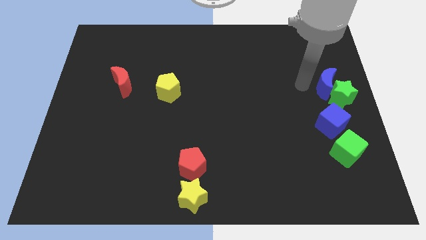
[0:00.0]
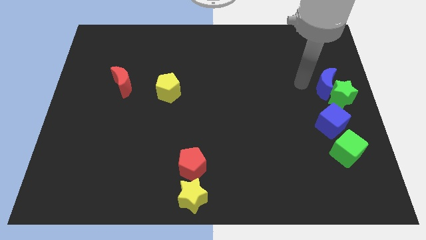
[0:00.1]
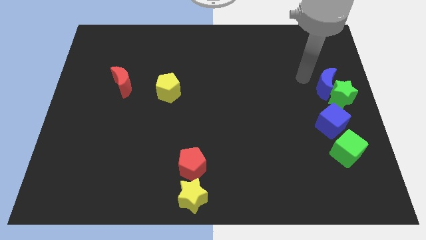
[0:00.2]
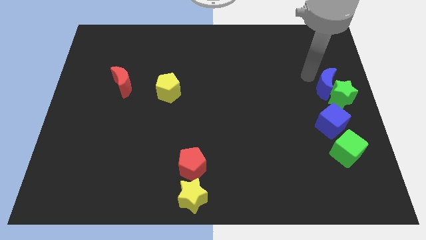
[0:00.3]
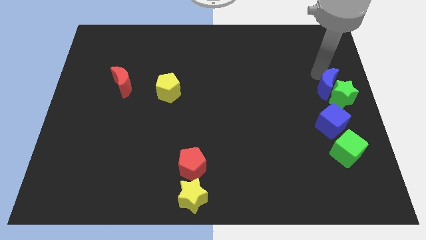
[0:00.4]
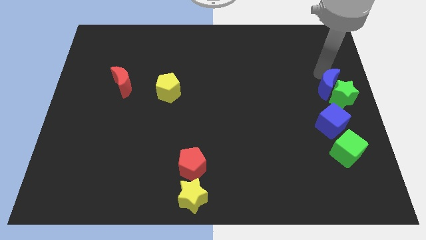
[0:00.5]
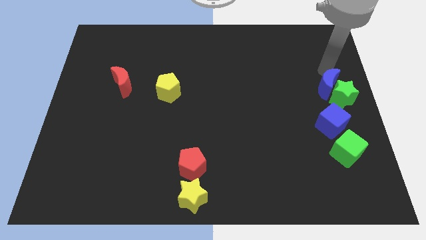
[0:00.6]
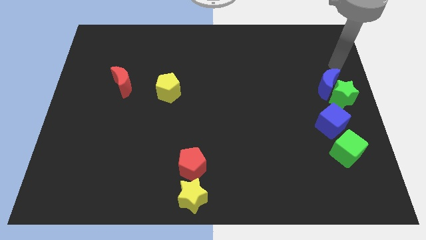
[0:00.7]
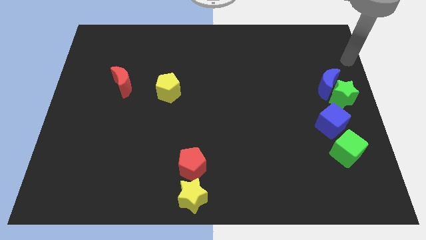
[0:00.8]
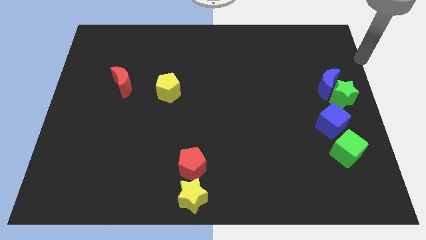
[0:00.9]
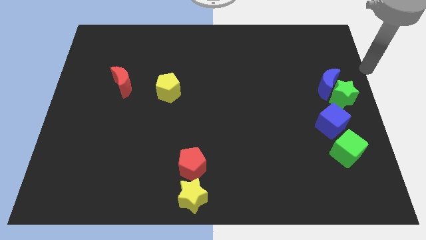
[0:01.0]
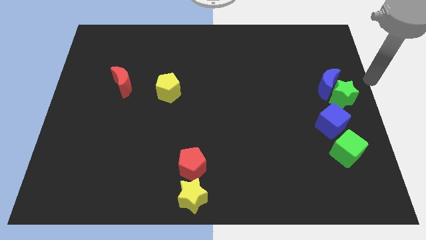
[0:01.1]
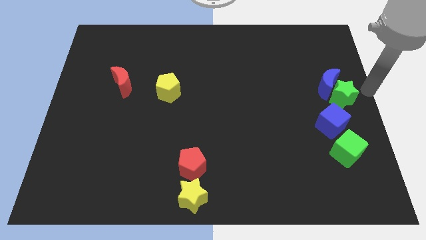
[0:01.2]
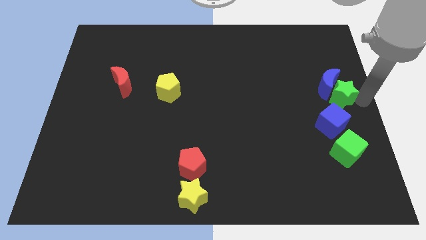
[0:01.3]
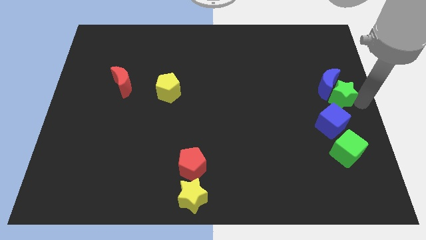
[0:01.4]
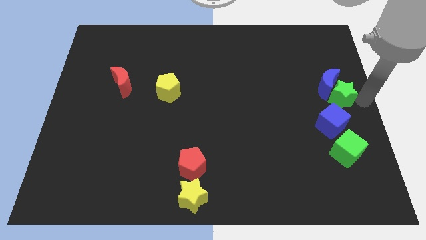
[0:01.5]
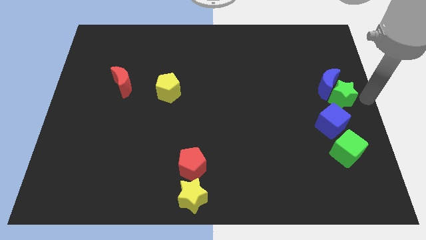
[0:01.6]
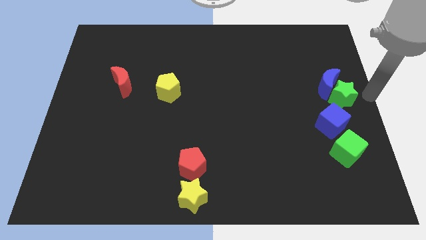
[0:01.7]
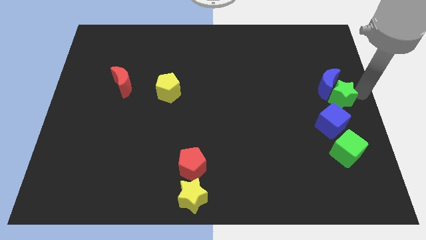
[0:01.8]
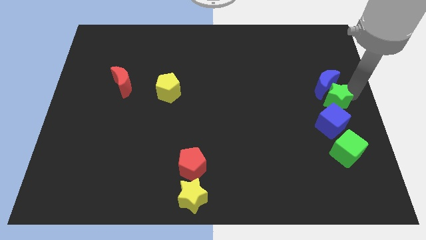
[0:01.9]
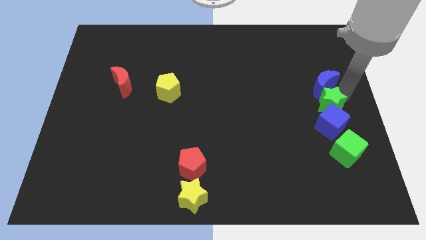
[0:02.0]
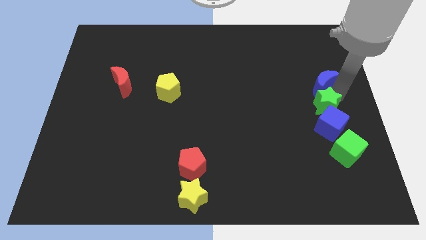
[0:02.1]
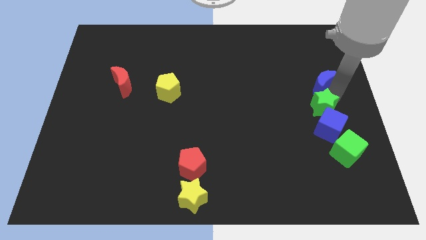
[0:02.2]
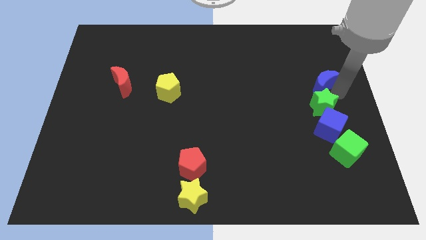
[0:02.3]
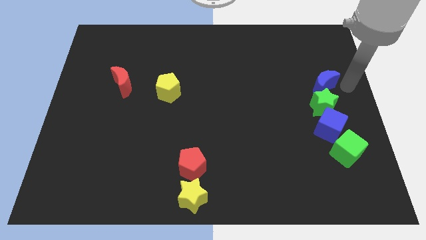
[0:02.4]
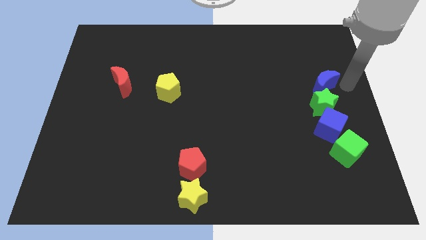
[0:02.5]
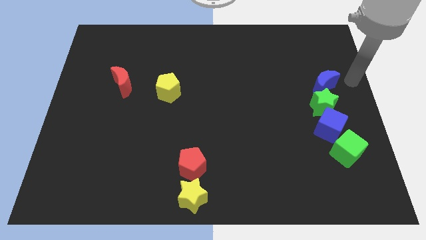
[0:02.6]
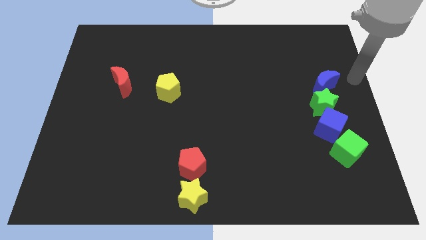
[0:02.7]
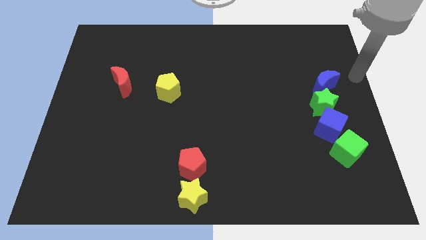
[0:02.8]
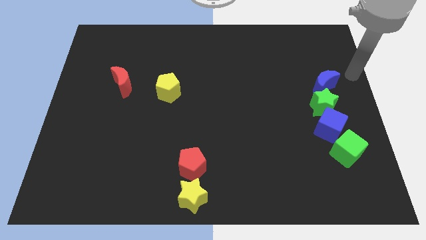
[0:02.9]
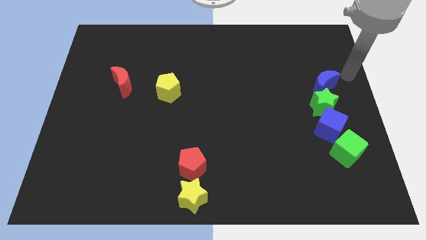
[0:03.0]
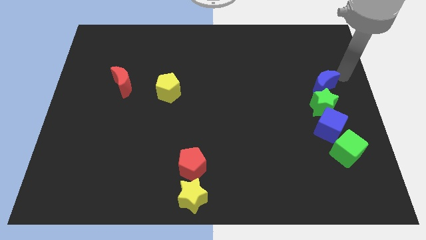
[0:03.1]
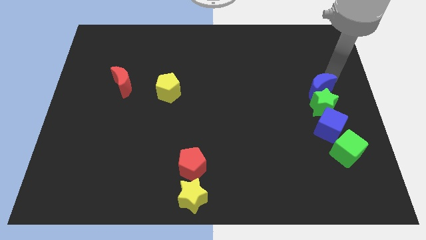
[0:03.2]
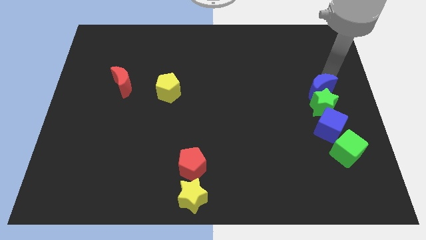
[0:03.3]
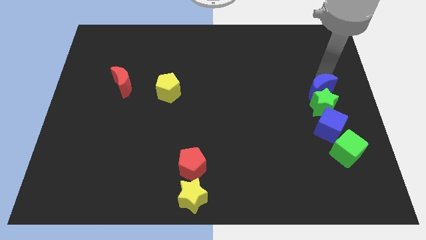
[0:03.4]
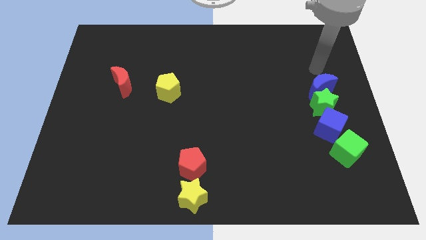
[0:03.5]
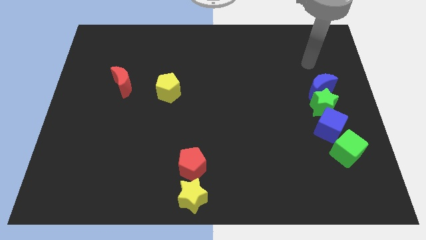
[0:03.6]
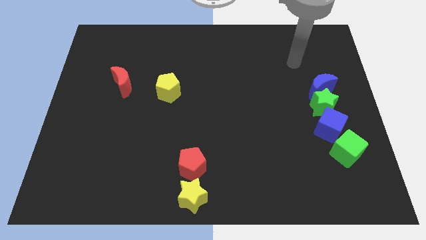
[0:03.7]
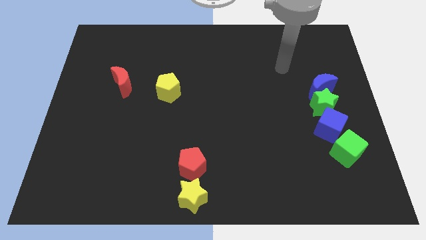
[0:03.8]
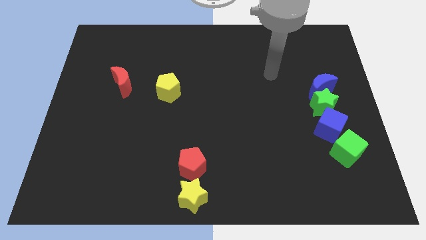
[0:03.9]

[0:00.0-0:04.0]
slightly push the green star into blue cube

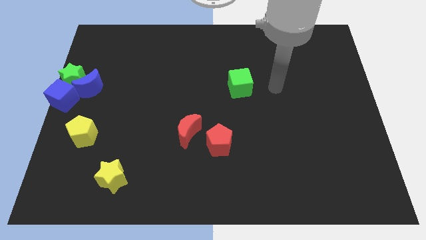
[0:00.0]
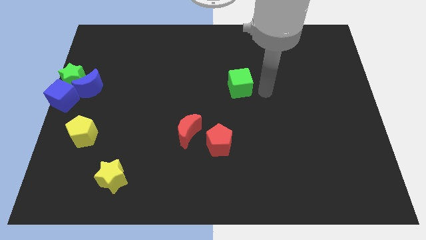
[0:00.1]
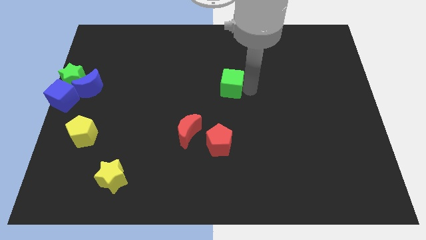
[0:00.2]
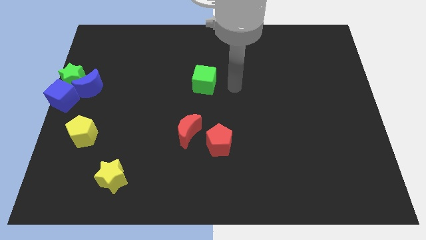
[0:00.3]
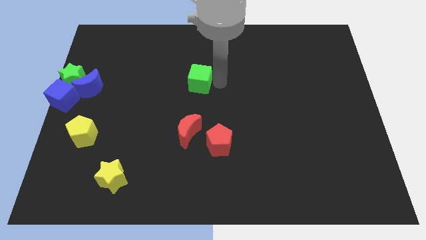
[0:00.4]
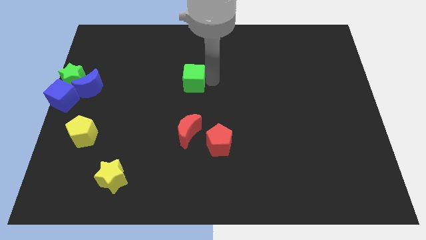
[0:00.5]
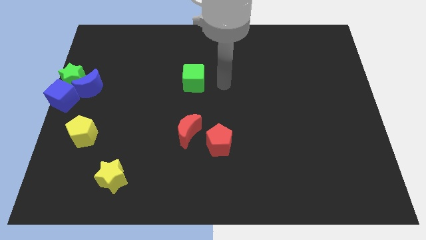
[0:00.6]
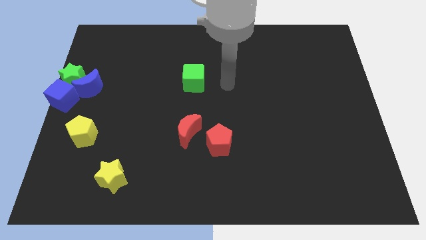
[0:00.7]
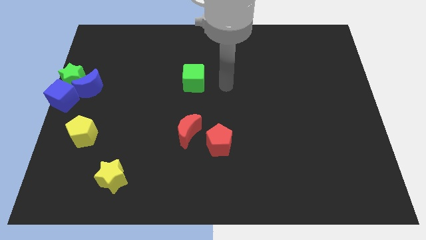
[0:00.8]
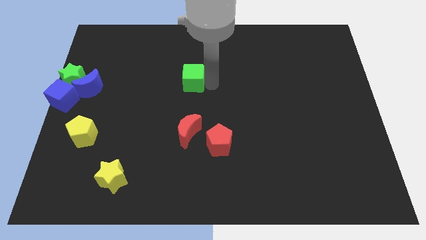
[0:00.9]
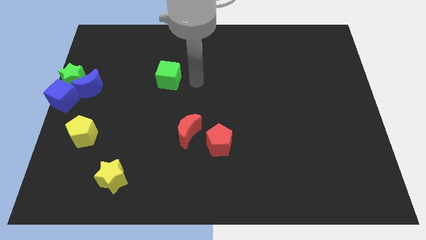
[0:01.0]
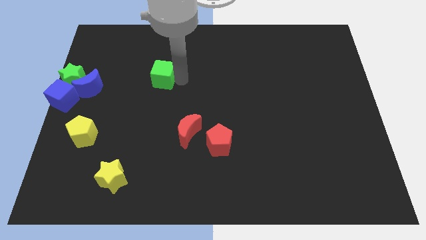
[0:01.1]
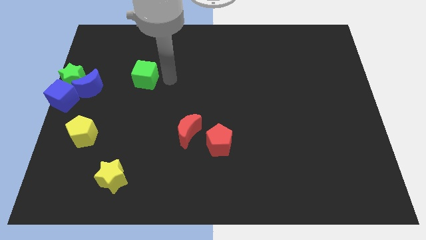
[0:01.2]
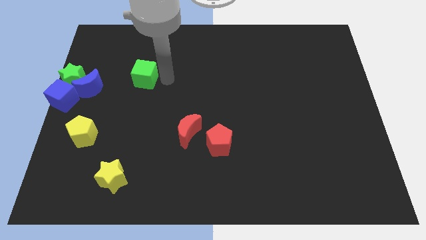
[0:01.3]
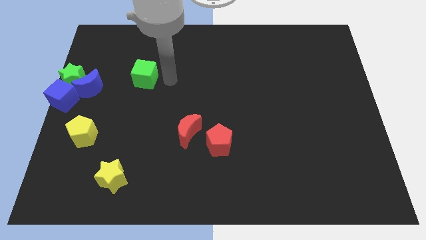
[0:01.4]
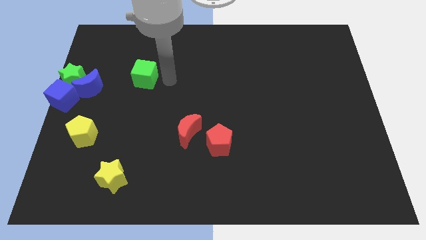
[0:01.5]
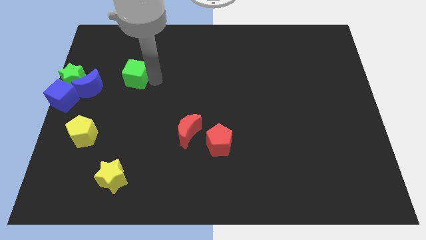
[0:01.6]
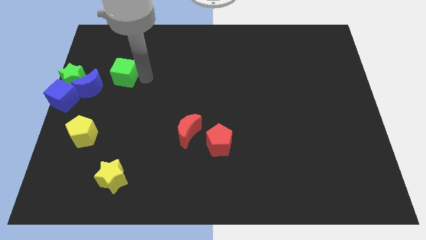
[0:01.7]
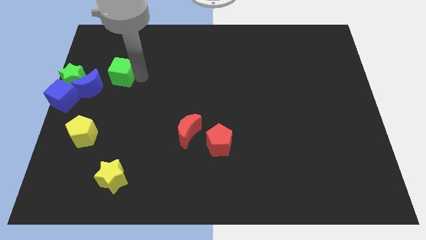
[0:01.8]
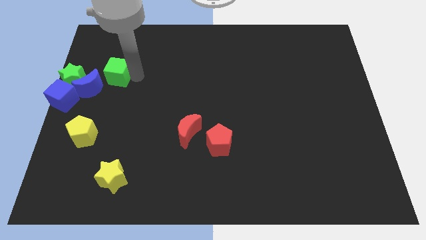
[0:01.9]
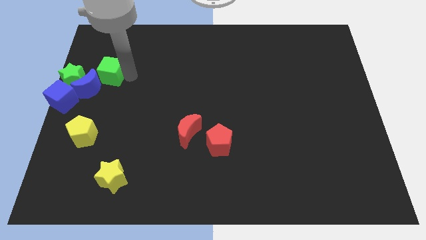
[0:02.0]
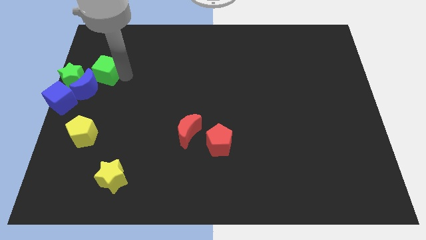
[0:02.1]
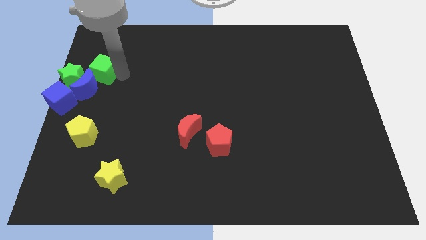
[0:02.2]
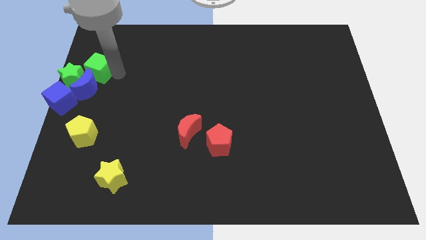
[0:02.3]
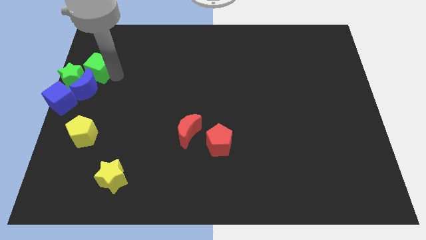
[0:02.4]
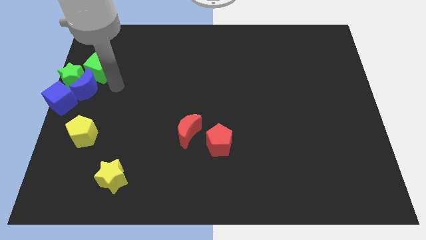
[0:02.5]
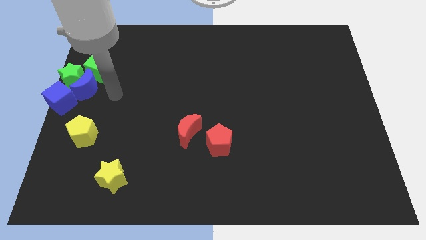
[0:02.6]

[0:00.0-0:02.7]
move the green cube close to the green star

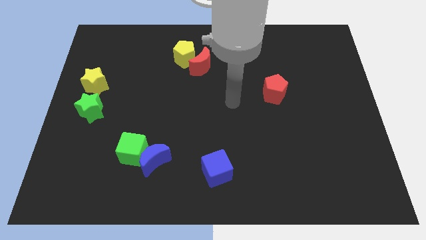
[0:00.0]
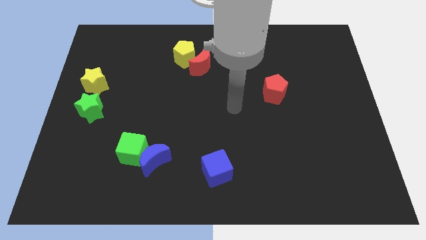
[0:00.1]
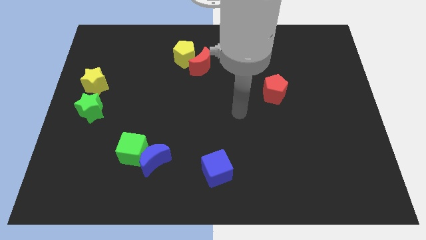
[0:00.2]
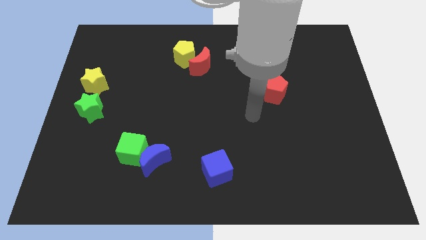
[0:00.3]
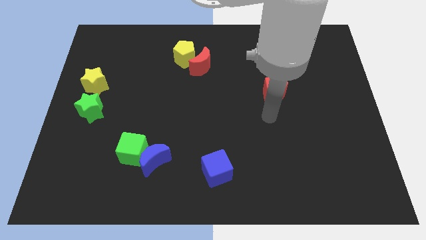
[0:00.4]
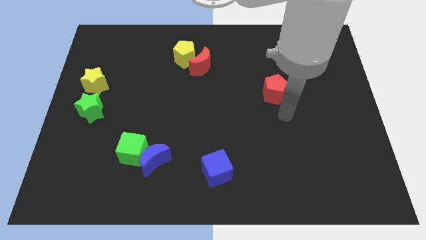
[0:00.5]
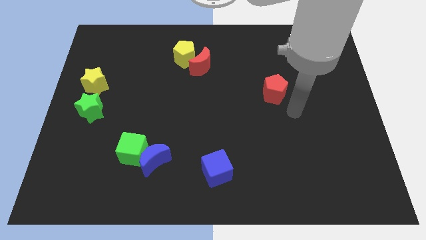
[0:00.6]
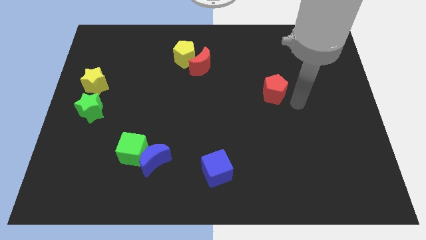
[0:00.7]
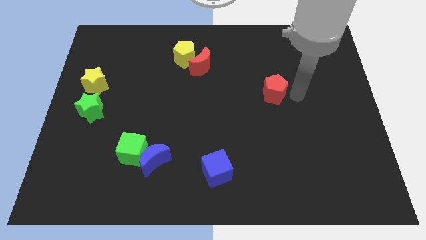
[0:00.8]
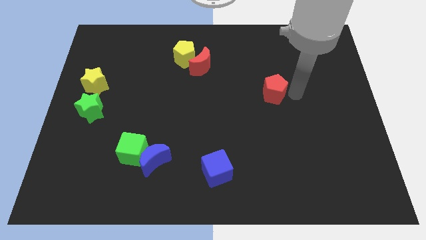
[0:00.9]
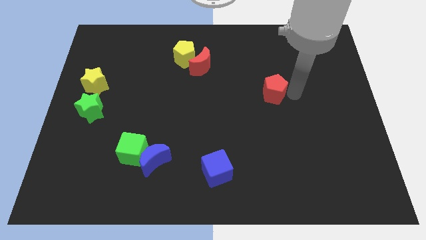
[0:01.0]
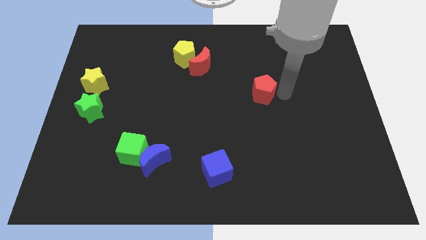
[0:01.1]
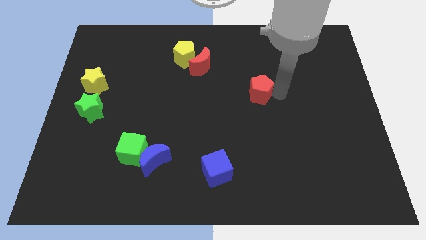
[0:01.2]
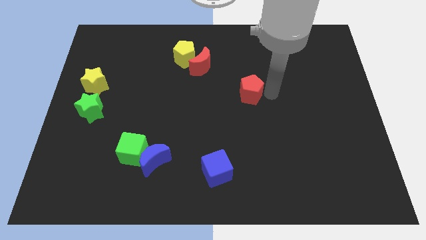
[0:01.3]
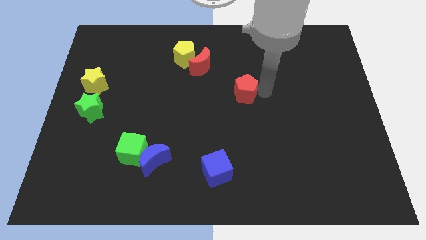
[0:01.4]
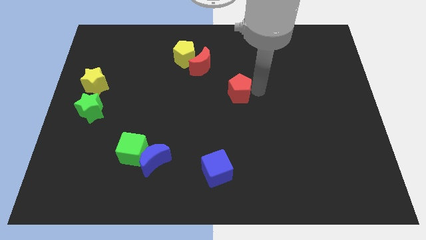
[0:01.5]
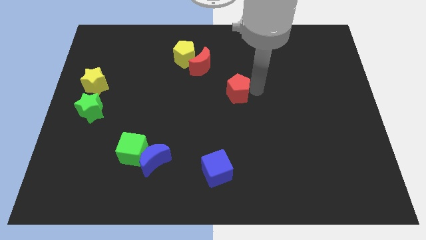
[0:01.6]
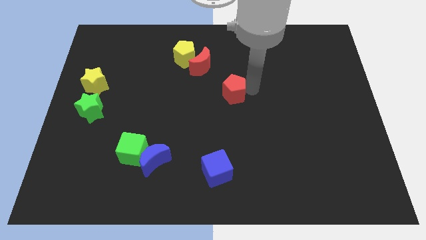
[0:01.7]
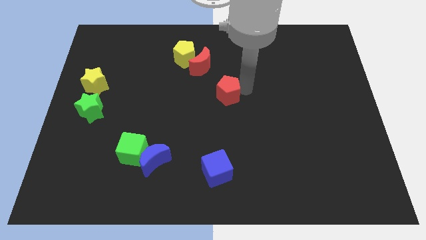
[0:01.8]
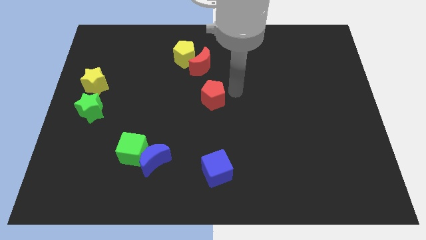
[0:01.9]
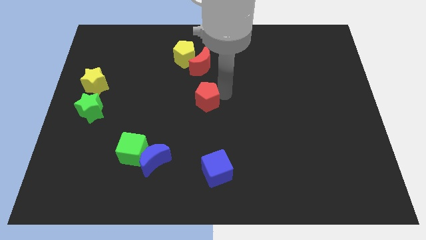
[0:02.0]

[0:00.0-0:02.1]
place the red pentagon at the center of the board

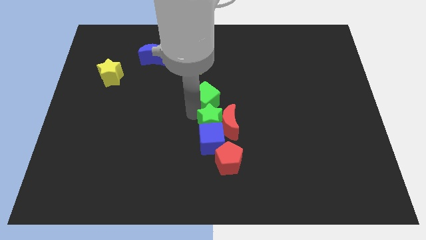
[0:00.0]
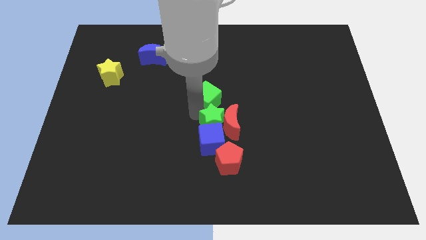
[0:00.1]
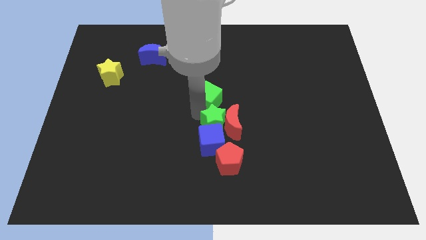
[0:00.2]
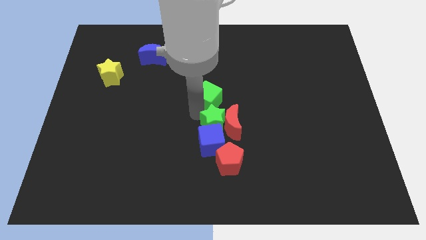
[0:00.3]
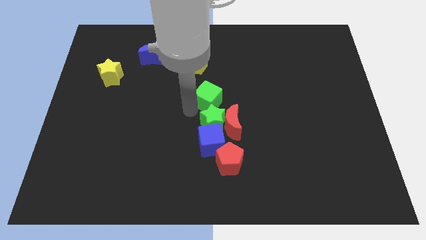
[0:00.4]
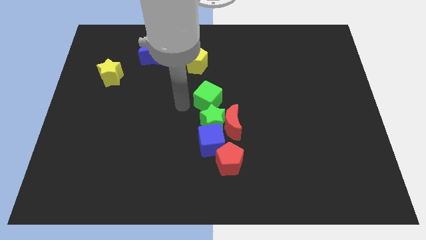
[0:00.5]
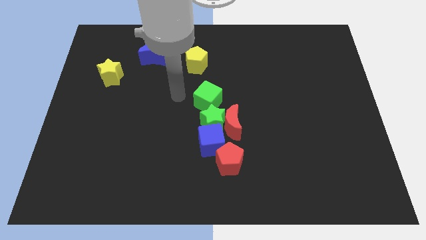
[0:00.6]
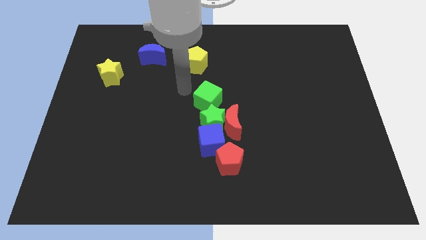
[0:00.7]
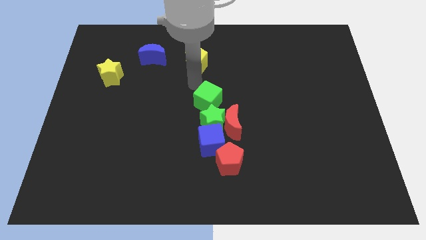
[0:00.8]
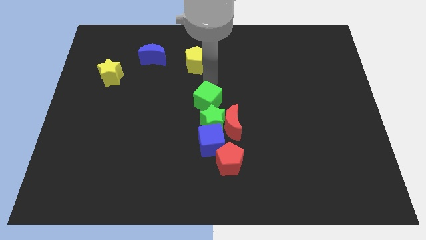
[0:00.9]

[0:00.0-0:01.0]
move green cube slightly right
